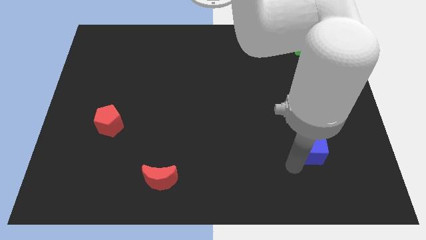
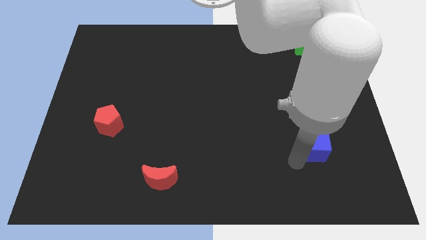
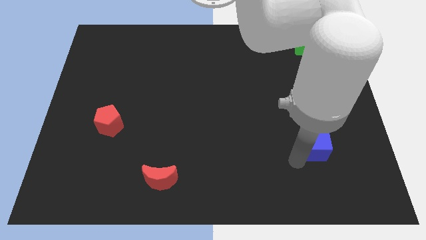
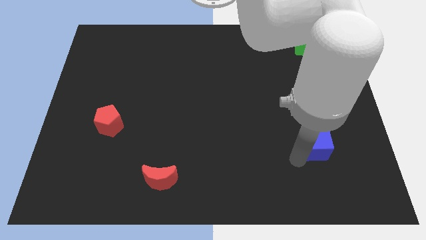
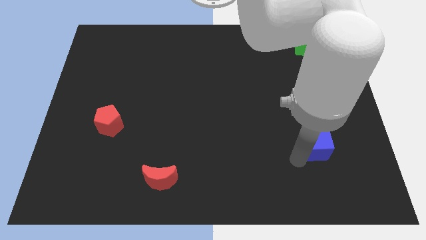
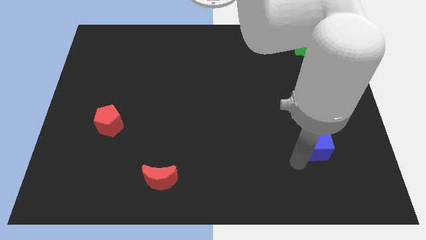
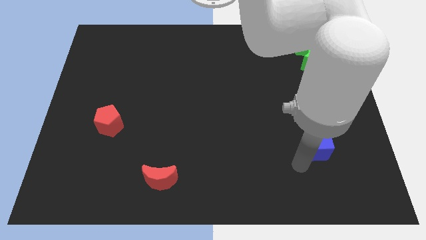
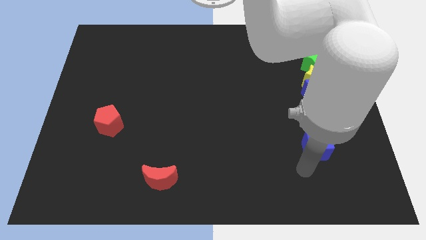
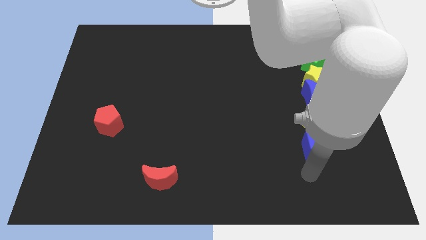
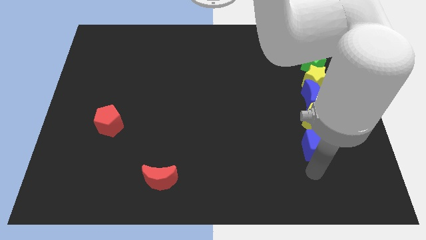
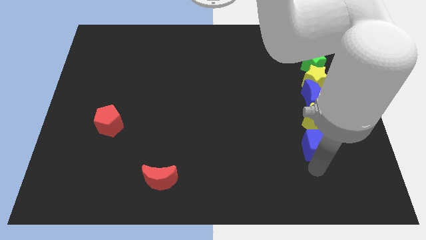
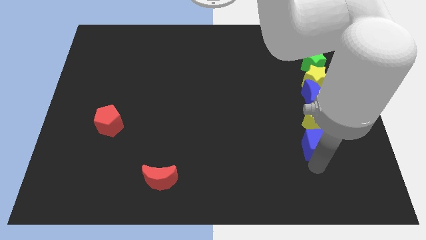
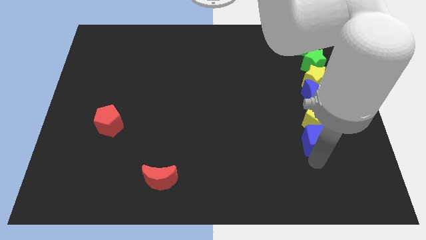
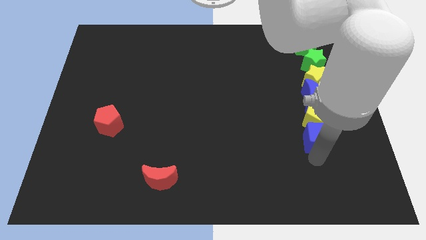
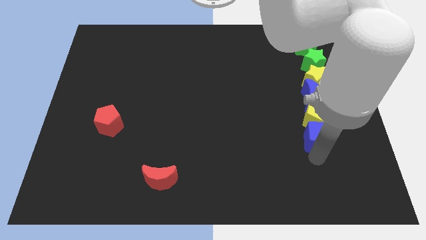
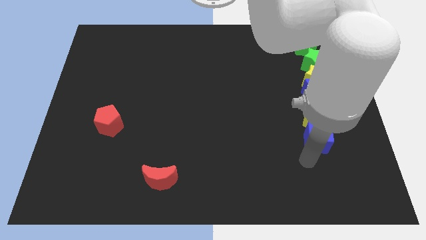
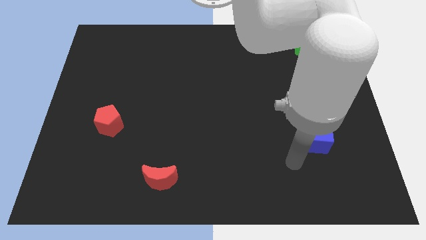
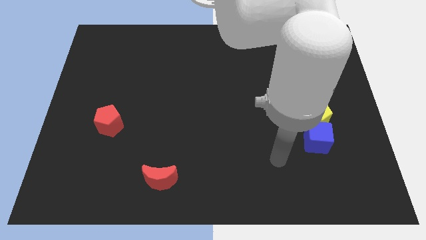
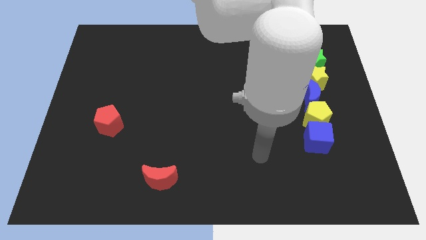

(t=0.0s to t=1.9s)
put the blue cube at the bottom of the yellow pentagon

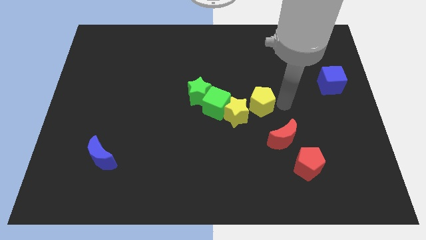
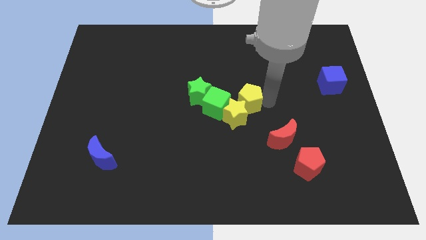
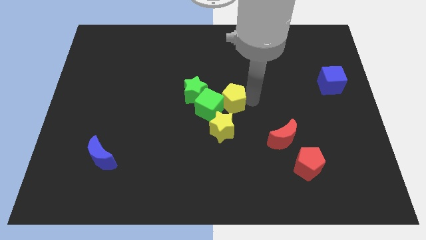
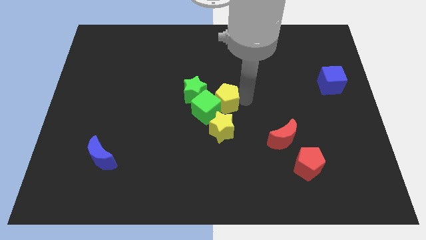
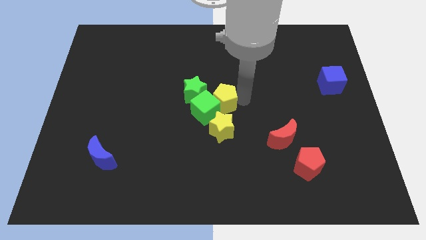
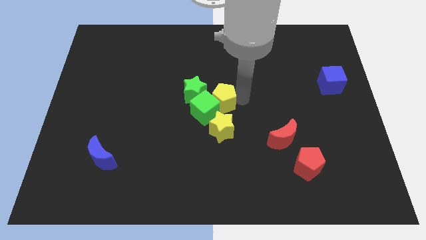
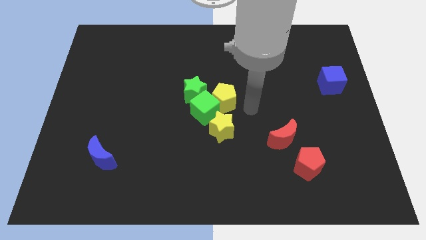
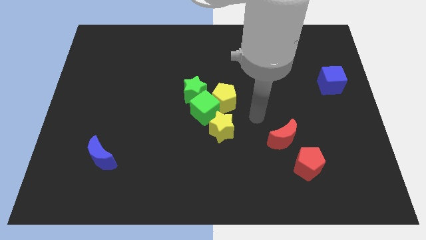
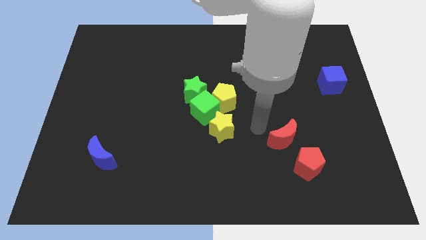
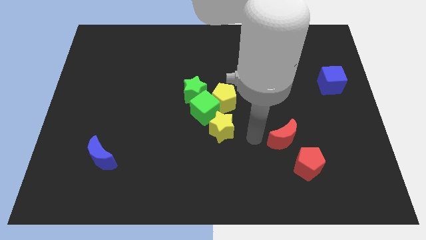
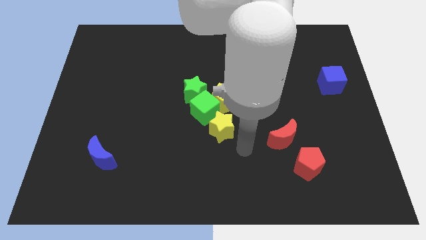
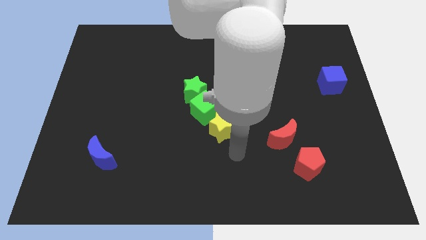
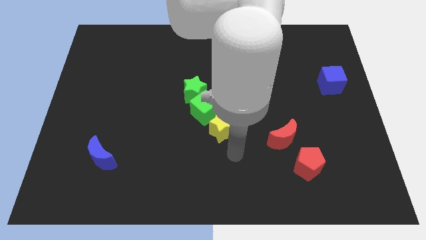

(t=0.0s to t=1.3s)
slightly move the yellow pentagon along with the green cube

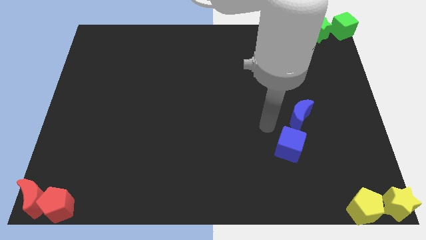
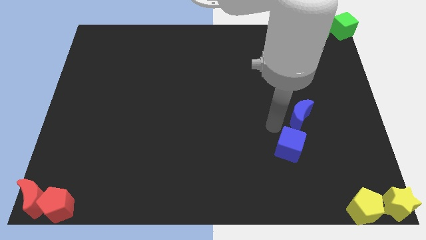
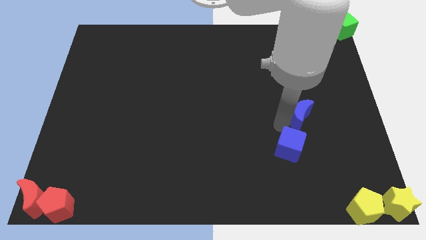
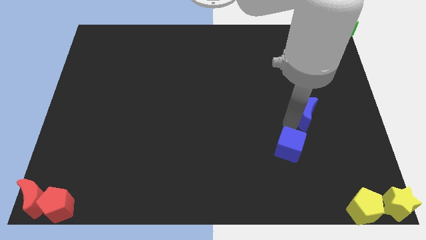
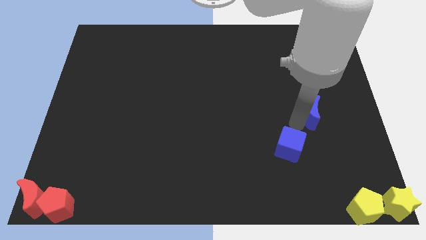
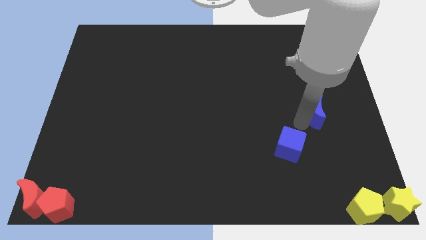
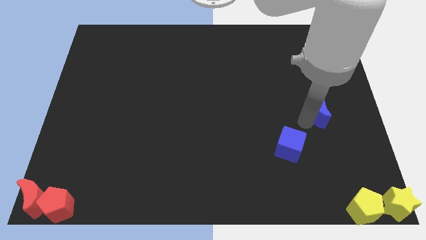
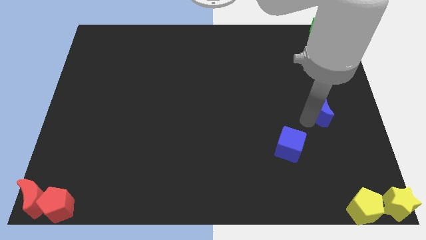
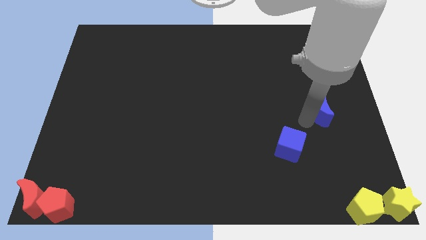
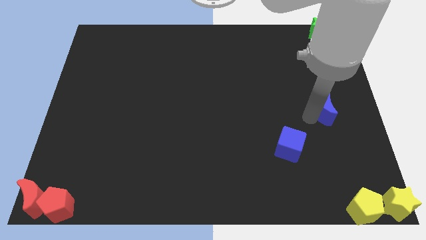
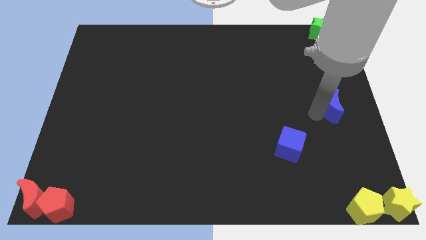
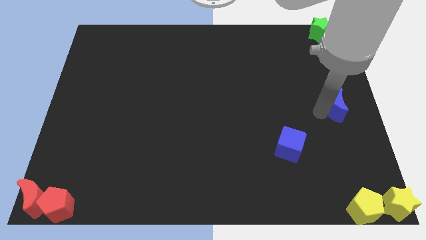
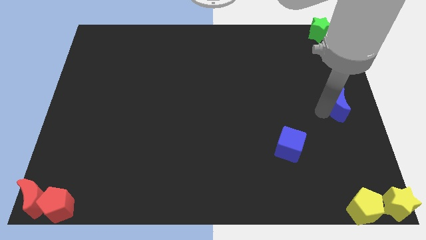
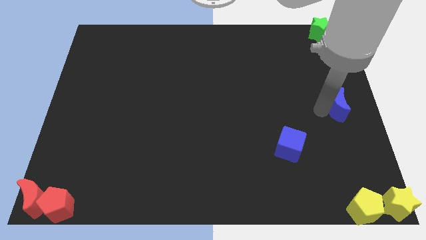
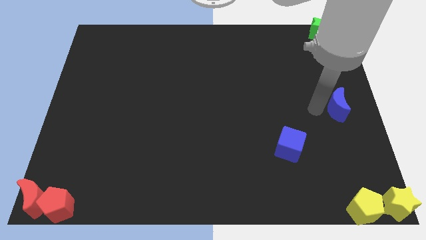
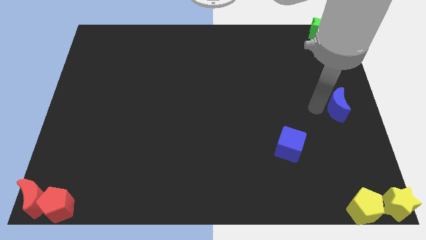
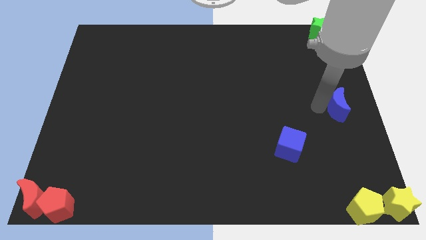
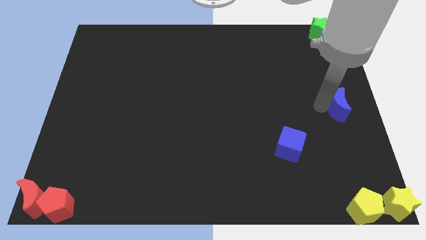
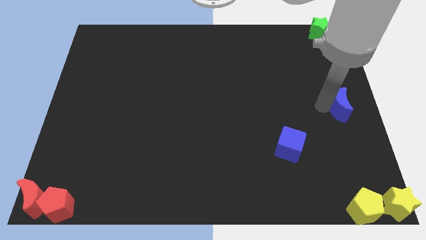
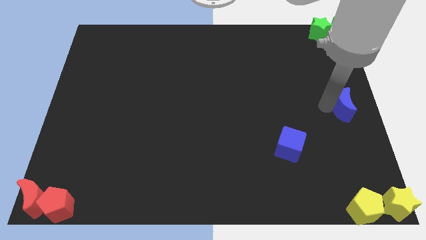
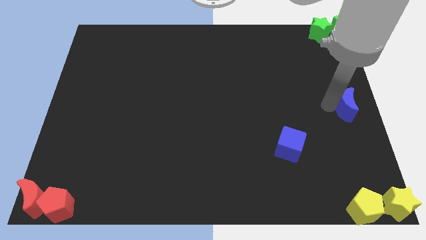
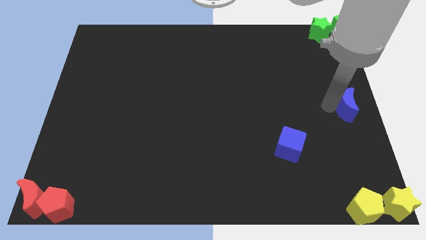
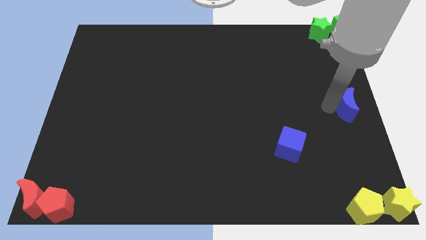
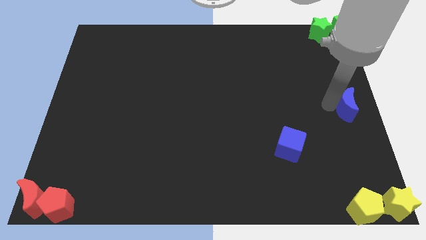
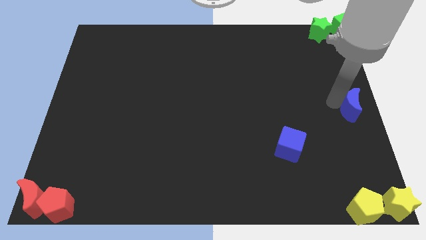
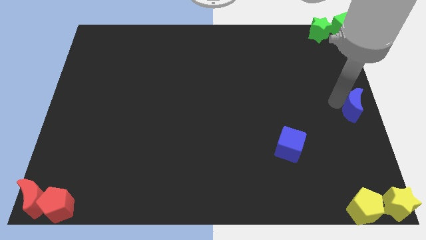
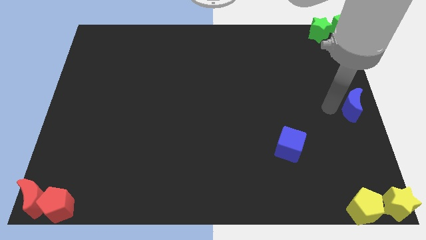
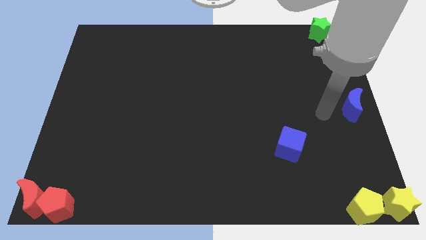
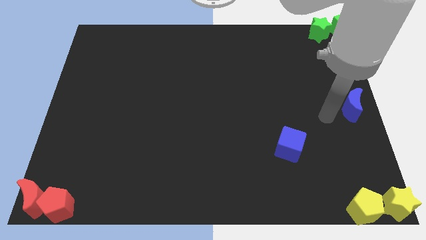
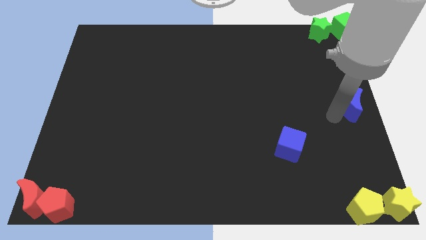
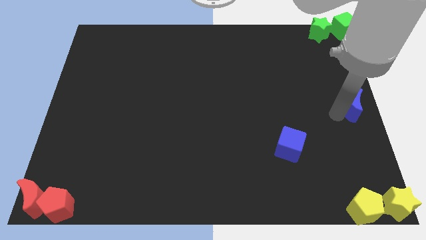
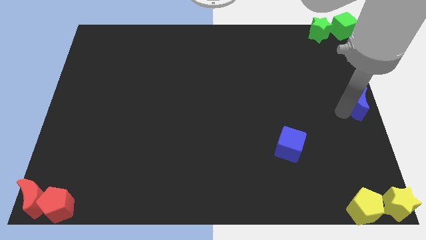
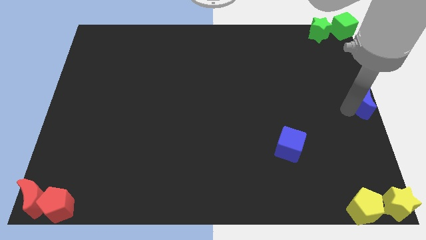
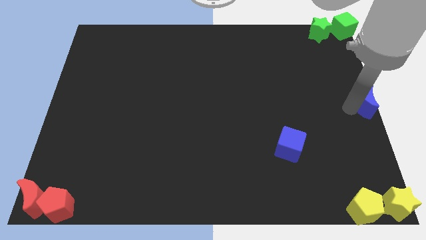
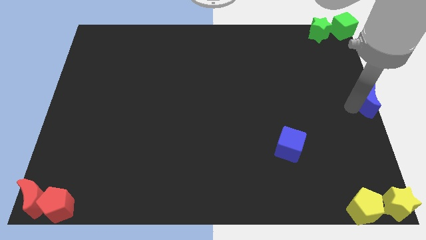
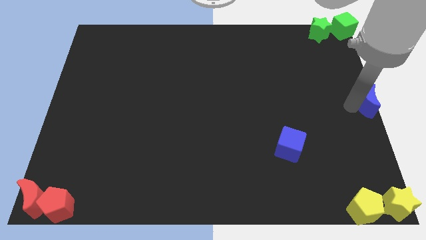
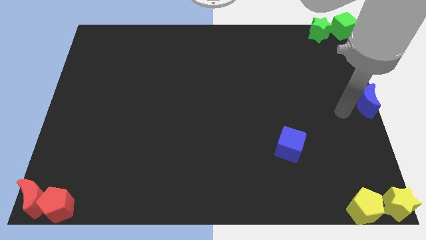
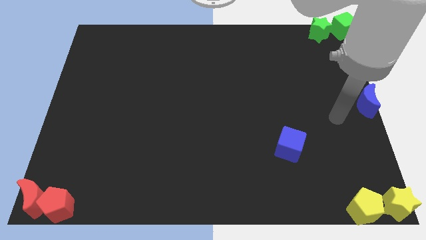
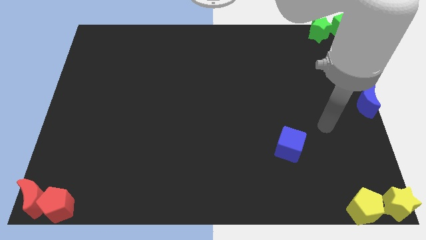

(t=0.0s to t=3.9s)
move the blue crescent to the right center of the board

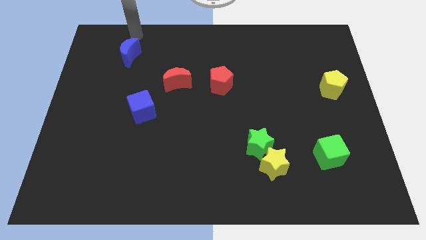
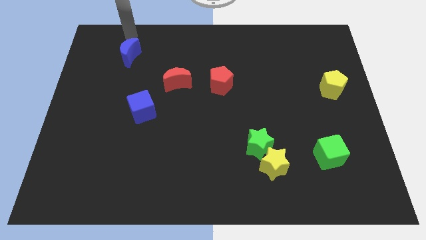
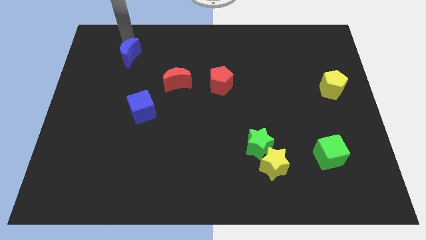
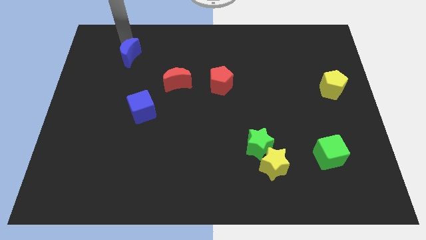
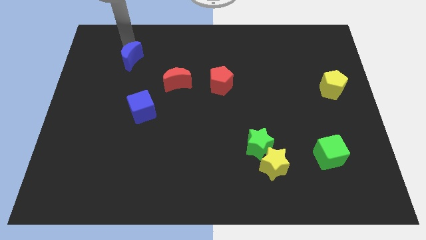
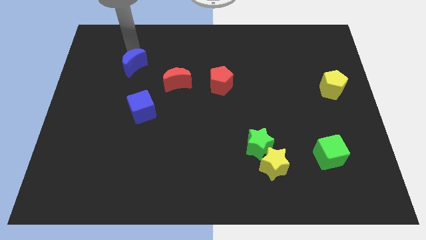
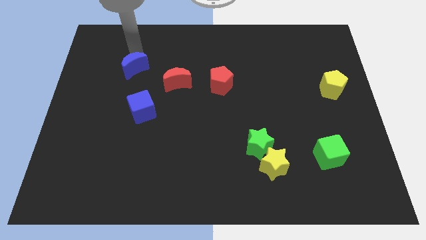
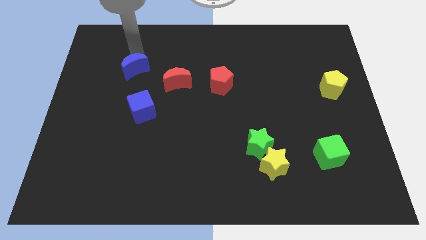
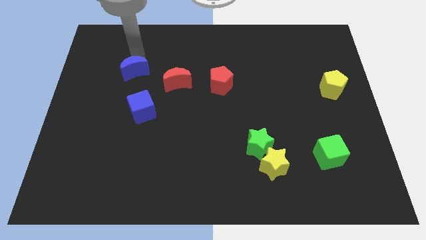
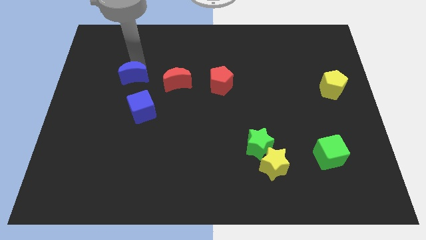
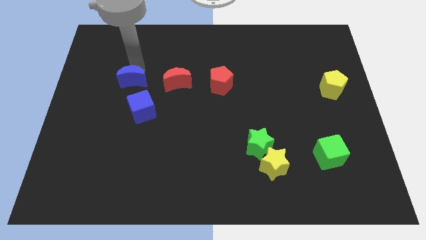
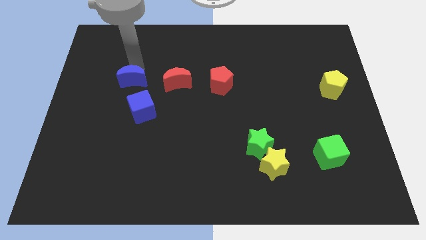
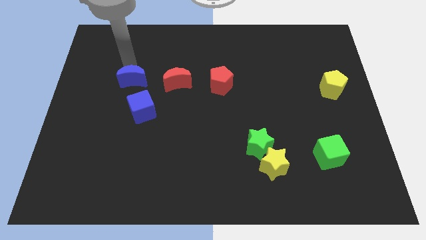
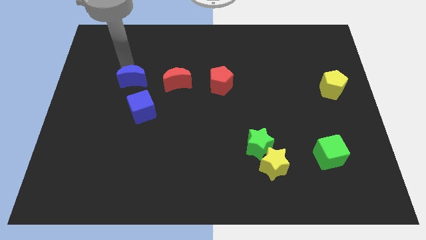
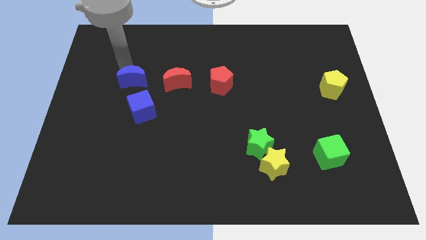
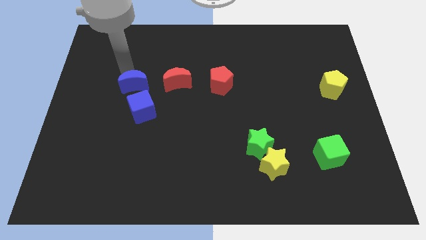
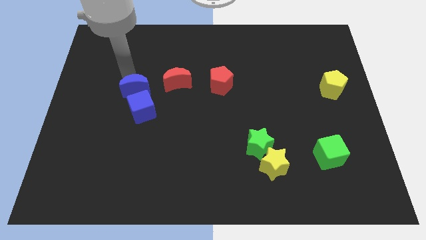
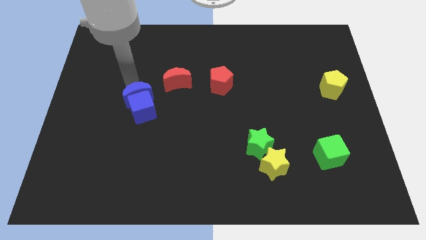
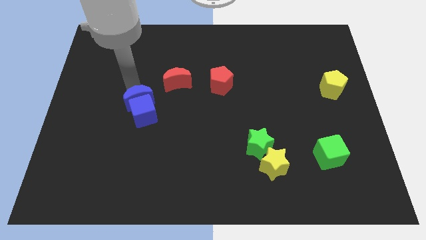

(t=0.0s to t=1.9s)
place the blue moon above the blue cube
